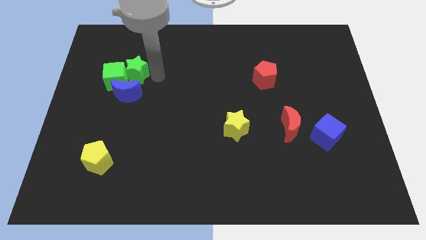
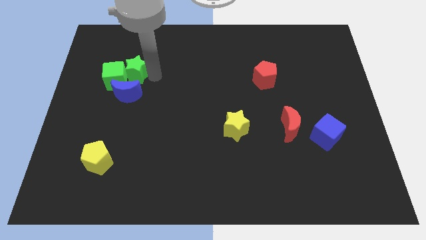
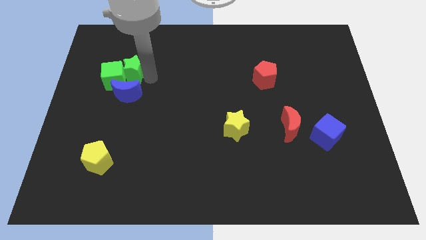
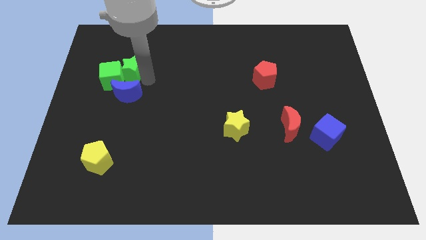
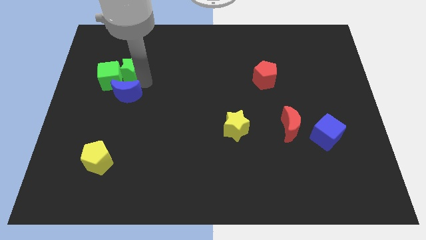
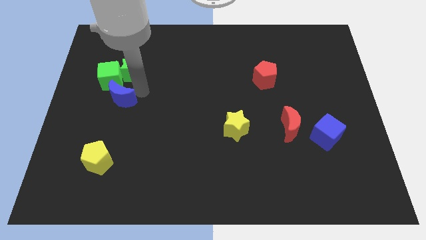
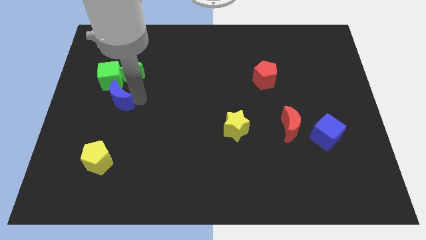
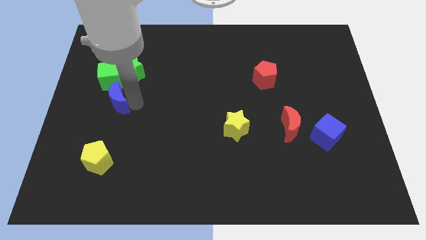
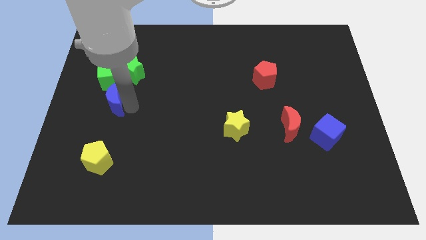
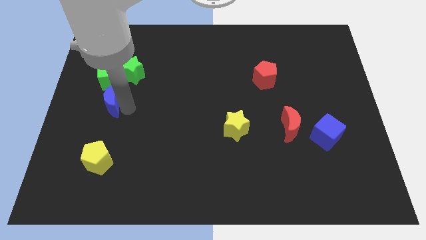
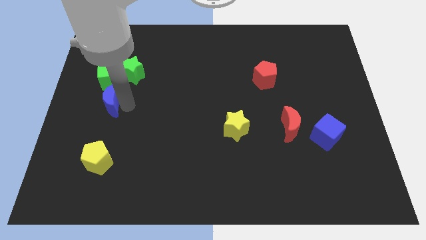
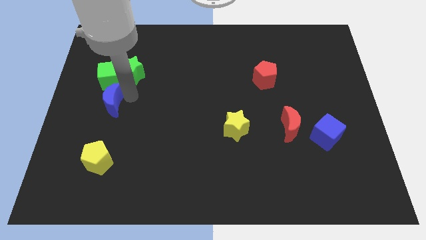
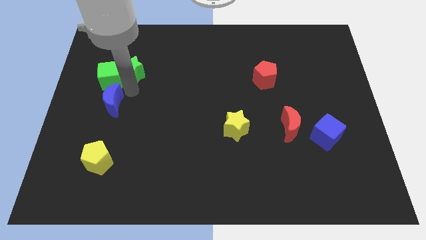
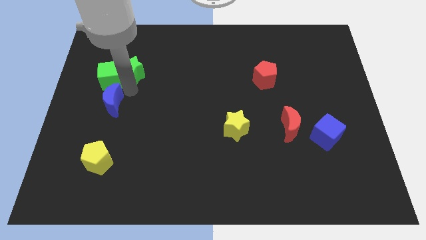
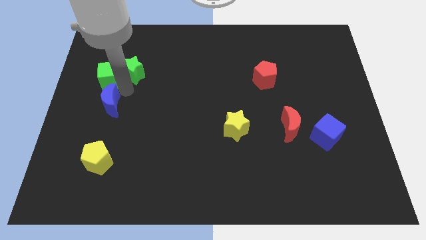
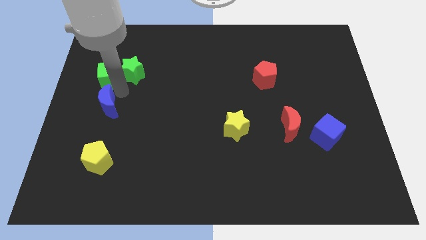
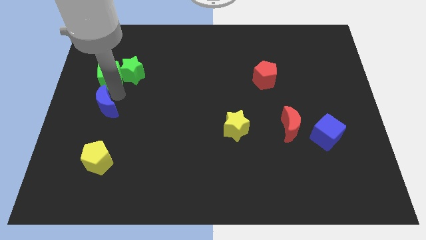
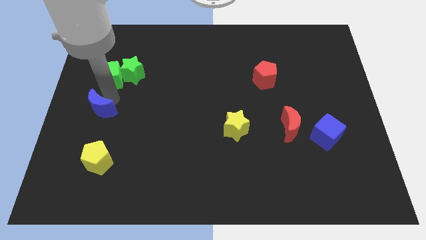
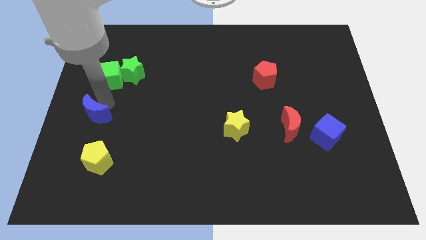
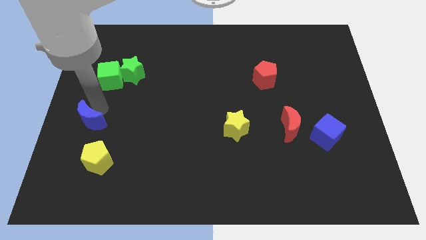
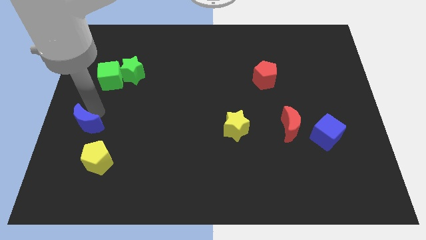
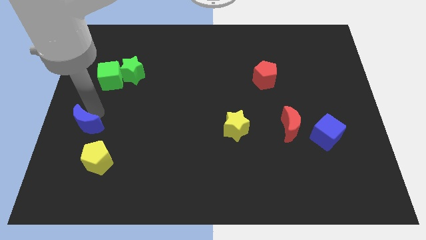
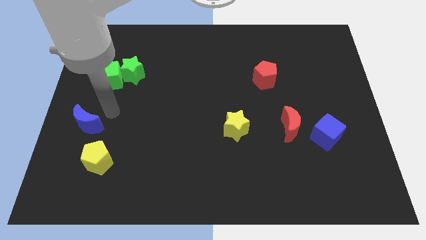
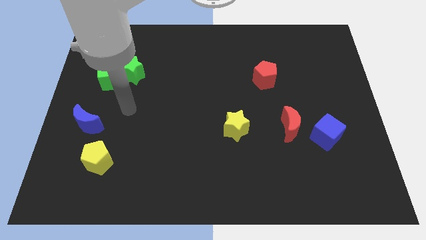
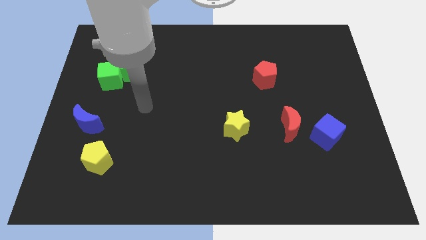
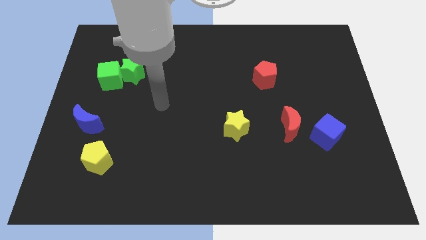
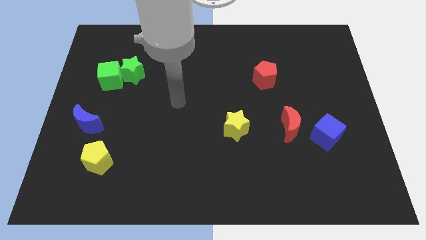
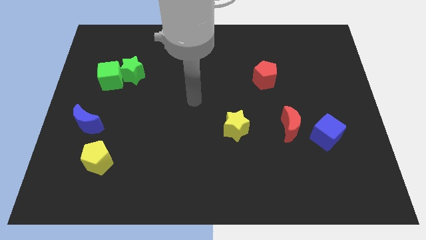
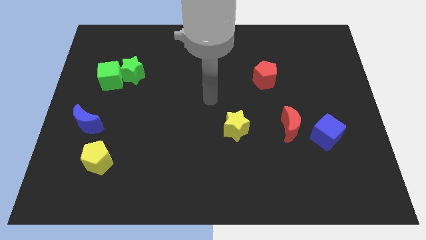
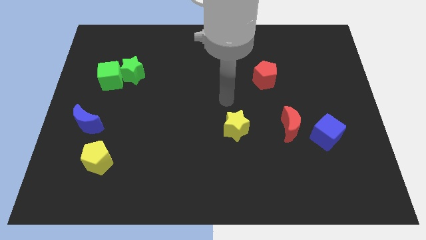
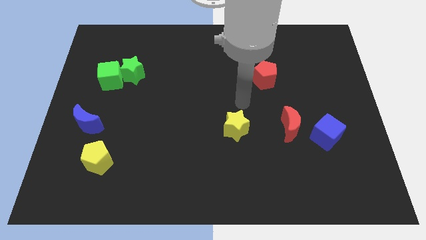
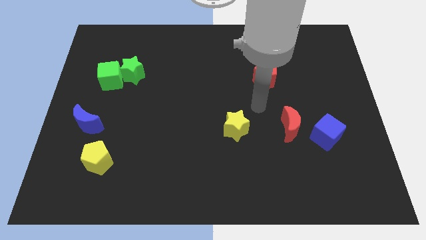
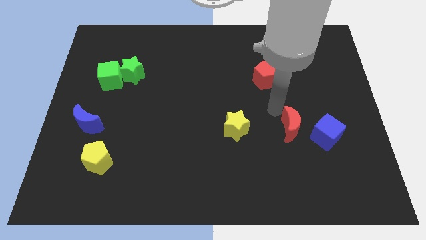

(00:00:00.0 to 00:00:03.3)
push the blue crescent to the top of the yellow pentagon

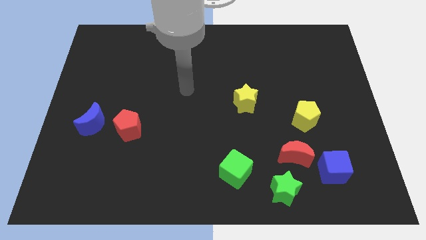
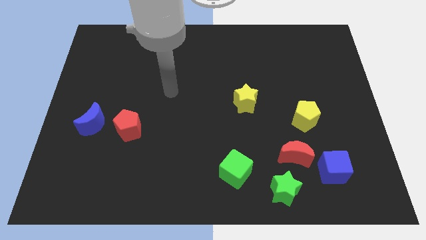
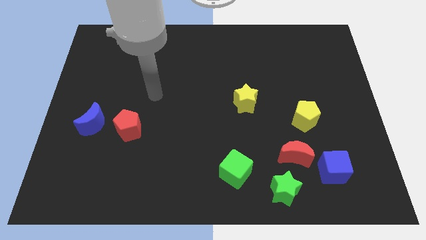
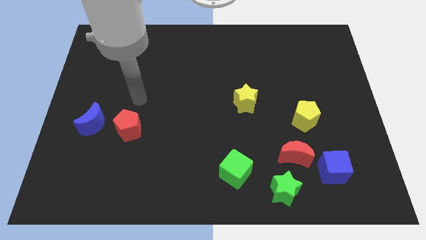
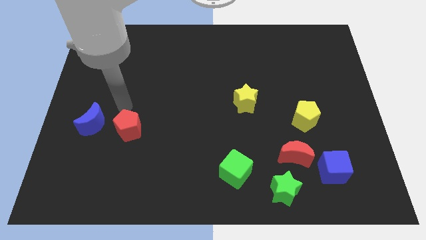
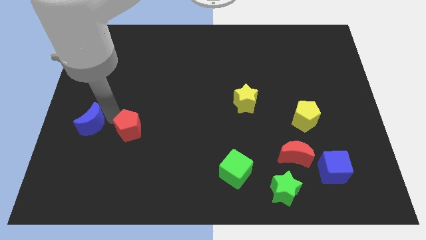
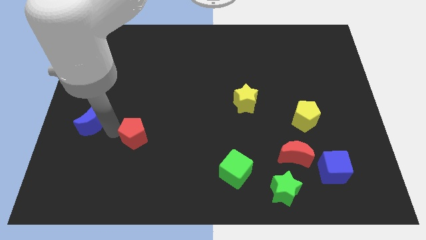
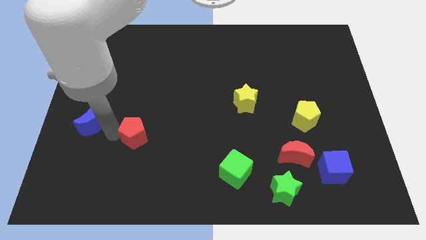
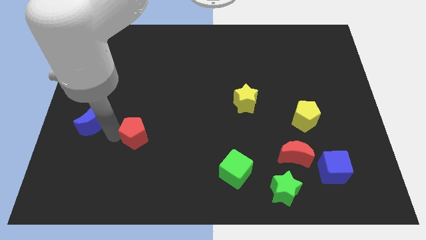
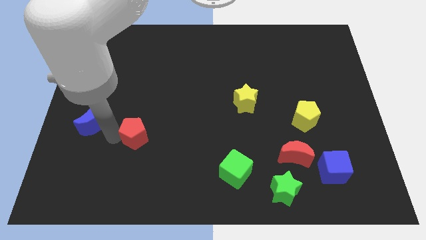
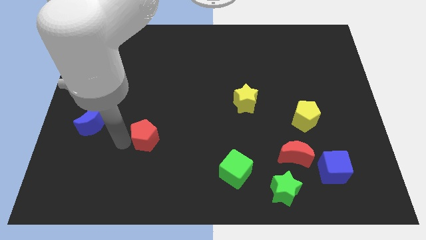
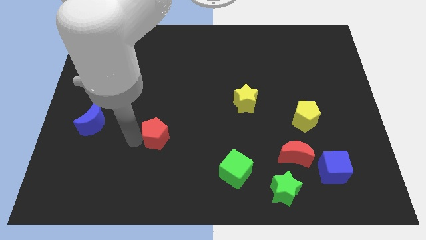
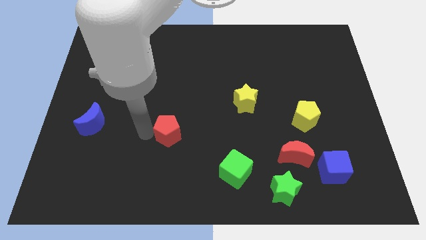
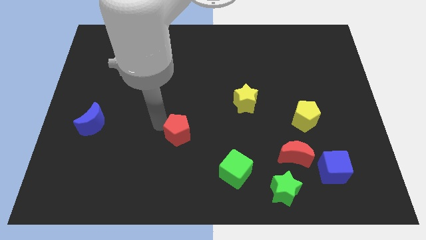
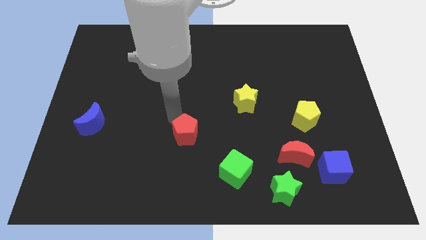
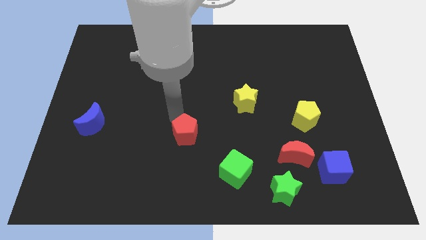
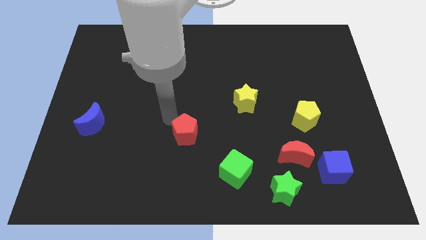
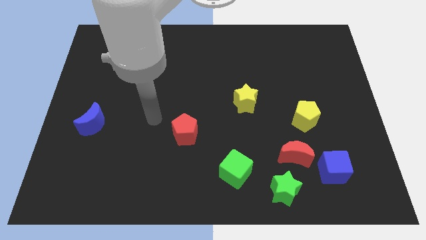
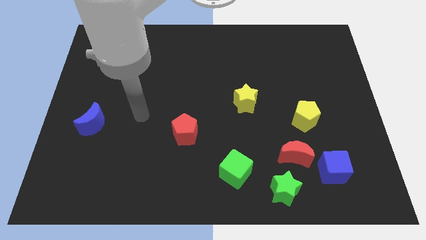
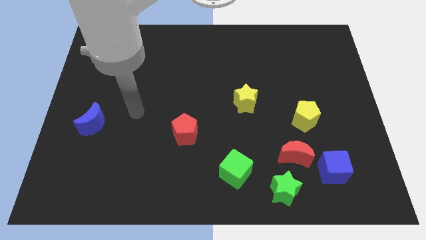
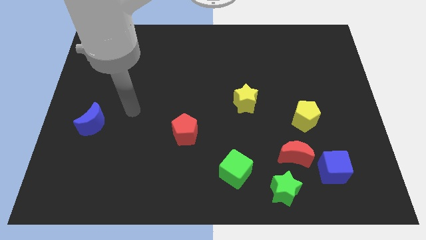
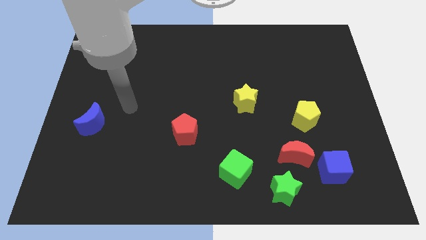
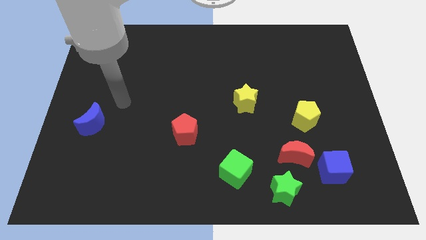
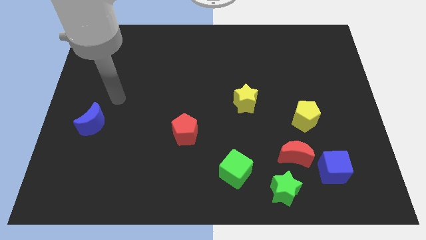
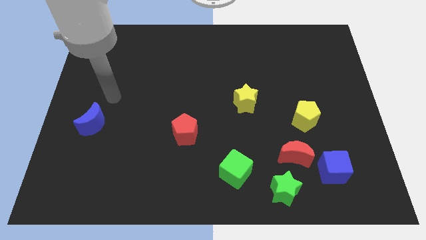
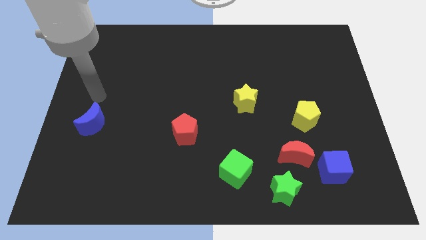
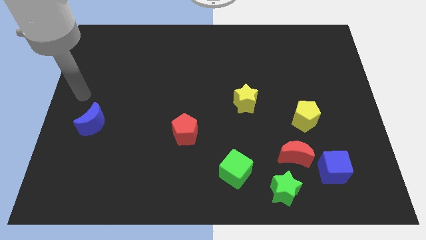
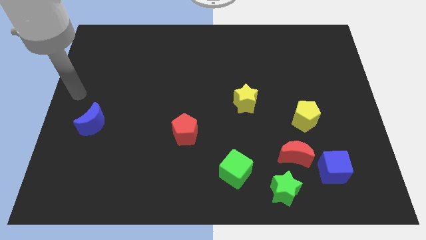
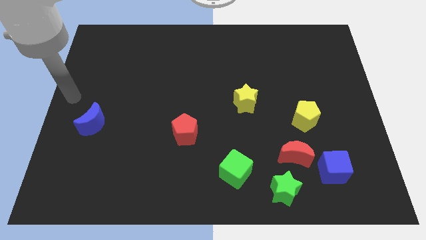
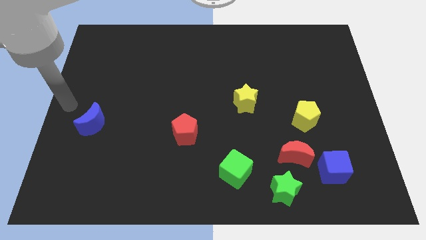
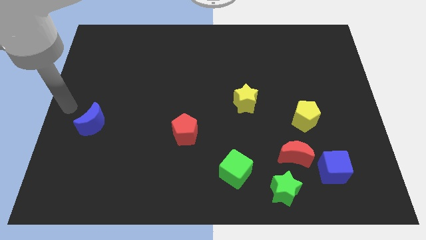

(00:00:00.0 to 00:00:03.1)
push red pentagon to the top left of green cube

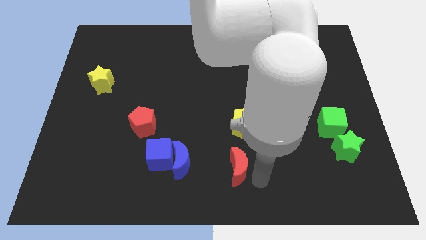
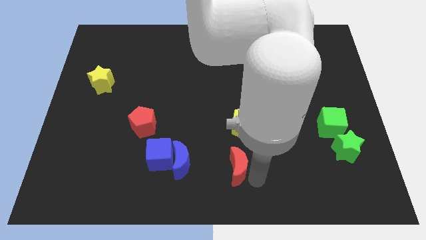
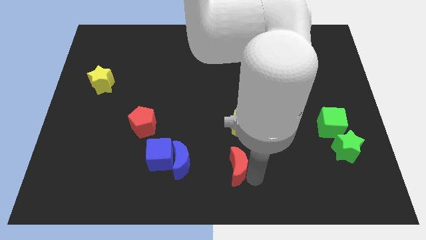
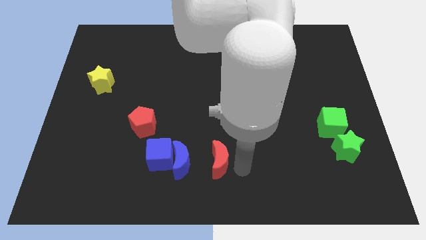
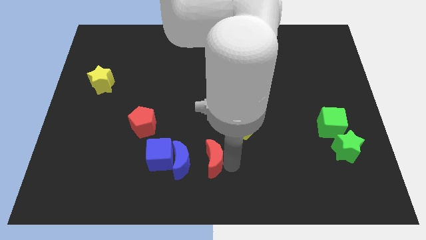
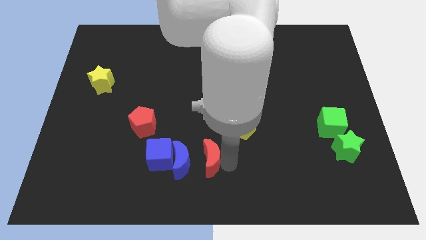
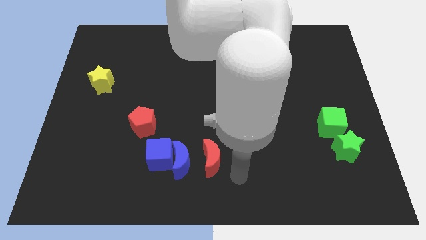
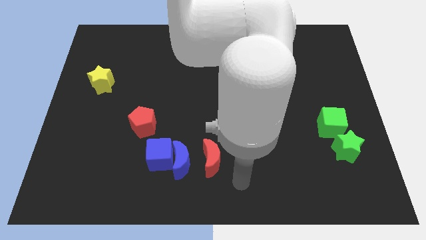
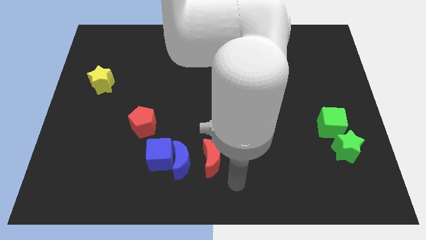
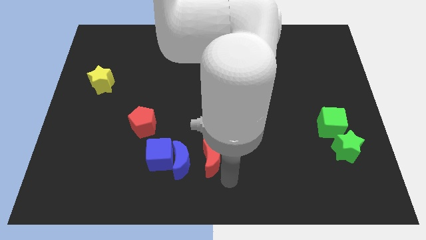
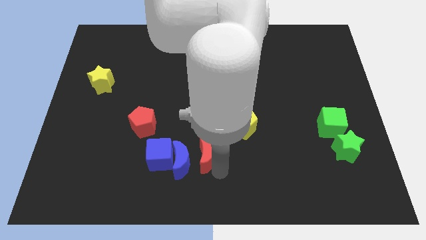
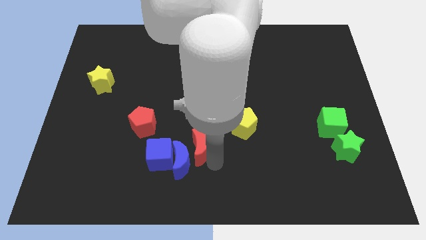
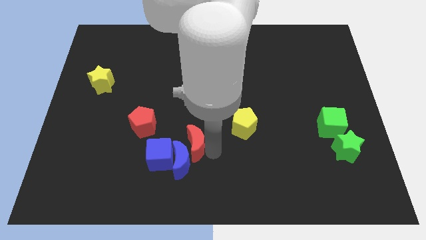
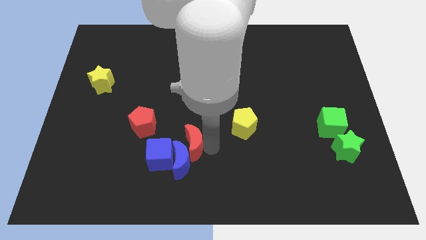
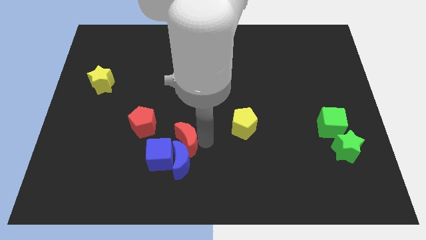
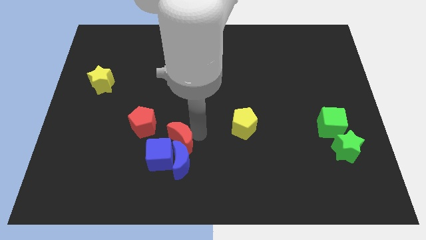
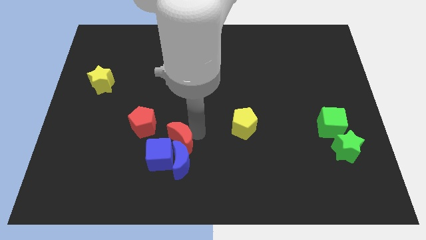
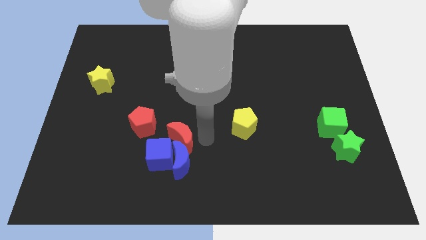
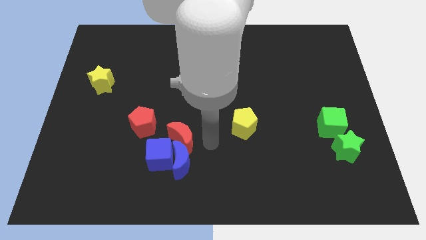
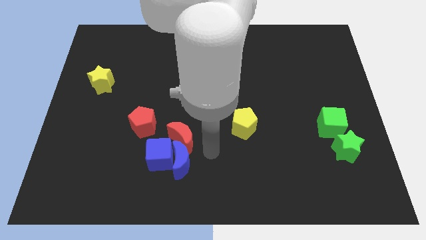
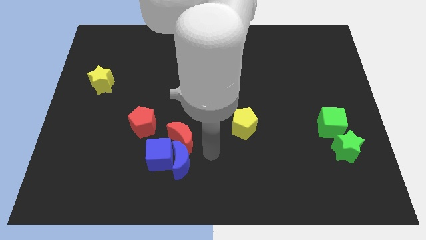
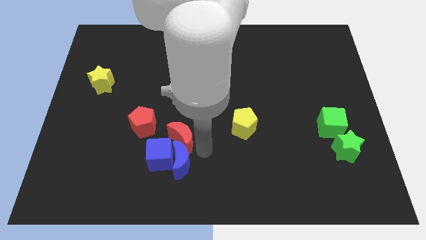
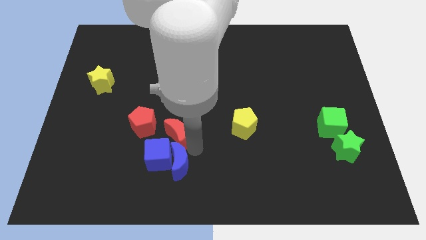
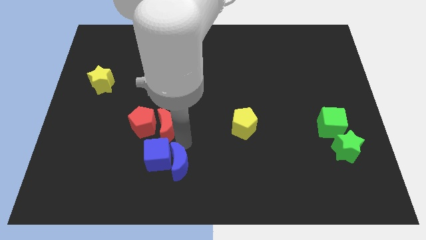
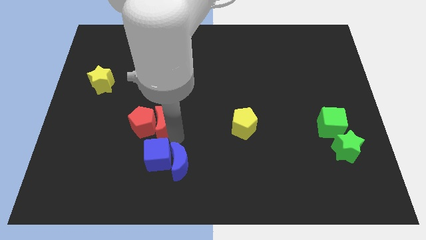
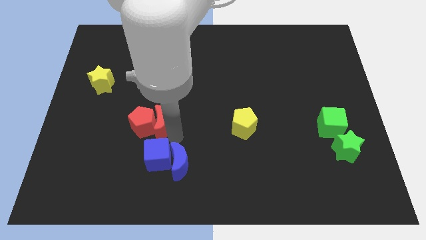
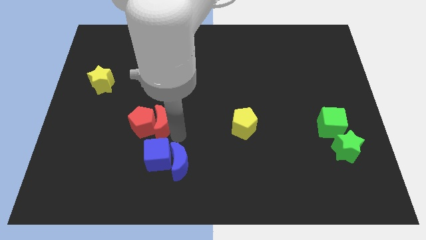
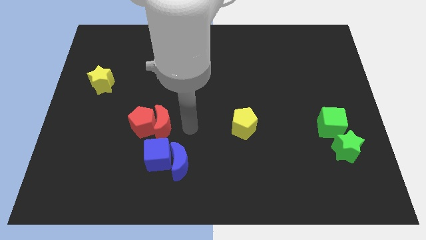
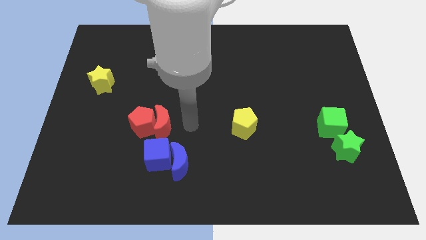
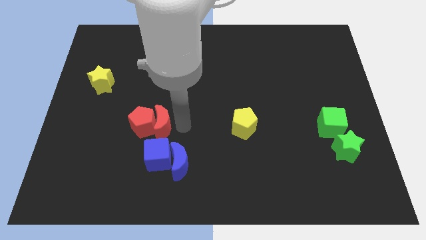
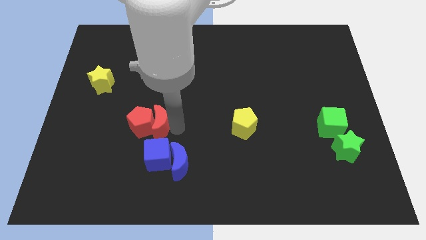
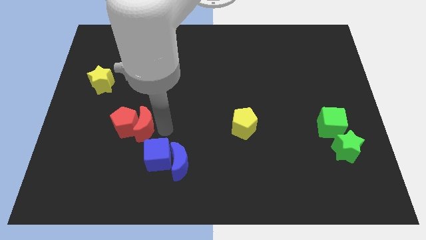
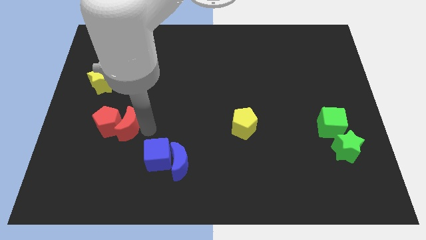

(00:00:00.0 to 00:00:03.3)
move red crescent and red pentagon towards left side
